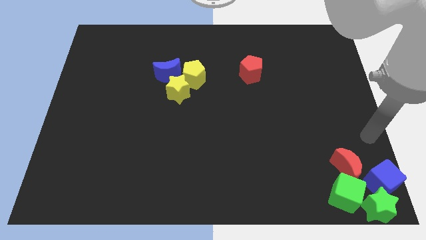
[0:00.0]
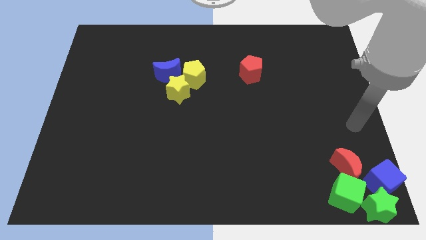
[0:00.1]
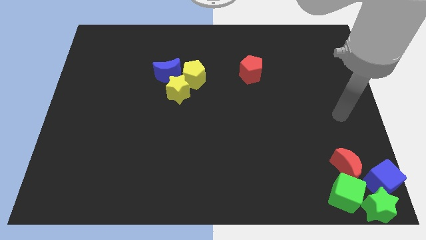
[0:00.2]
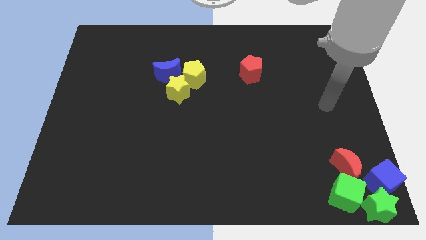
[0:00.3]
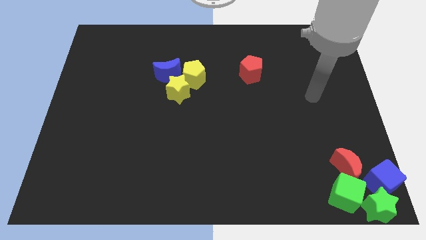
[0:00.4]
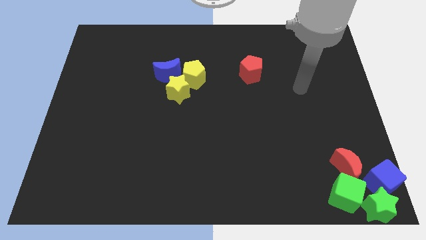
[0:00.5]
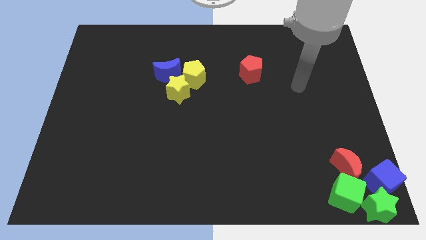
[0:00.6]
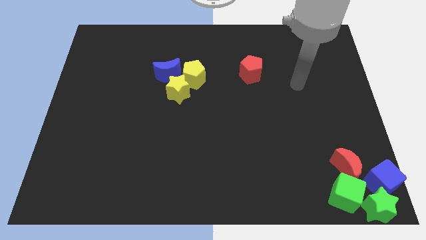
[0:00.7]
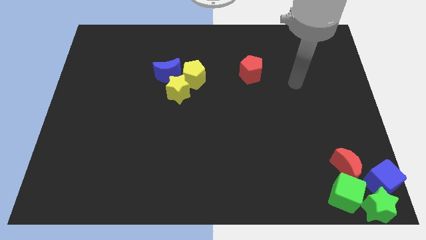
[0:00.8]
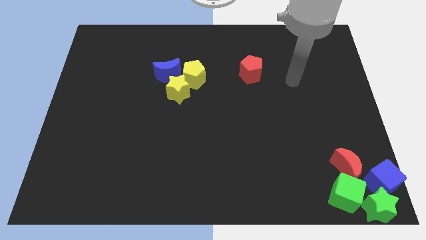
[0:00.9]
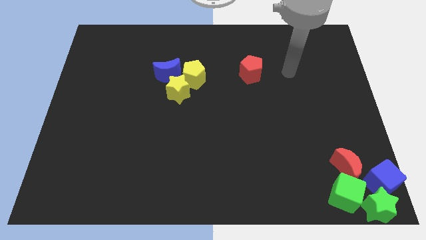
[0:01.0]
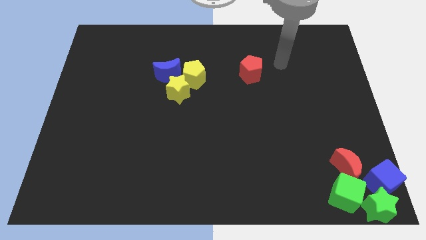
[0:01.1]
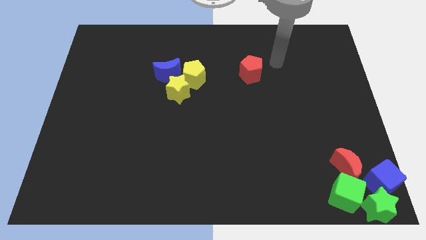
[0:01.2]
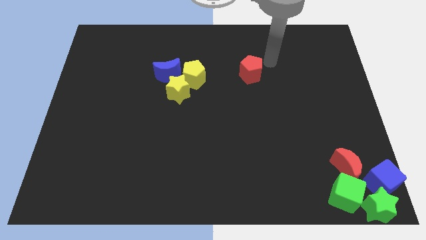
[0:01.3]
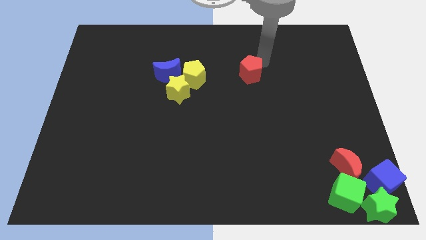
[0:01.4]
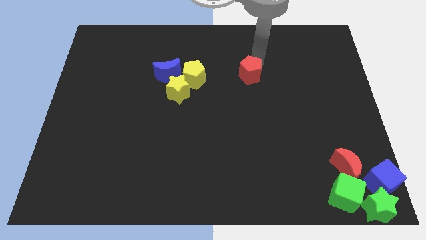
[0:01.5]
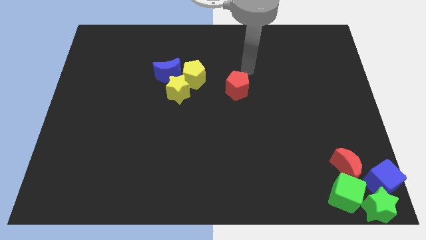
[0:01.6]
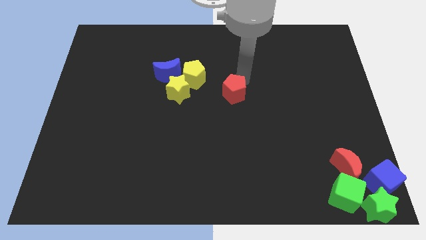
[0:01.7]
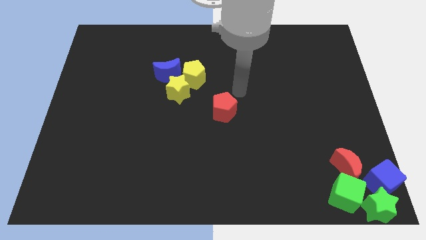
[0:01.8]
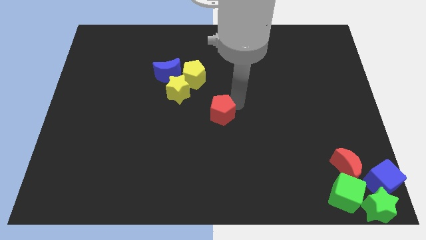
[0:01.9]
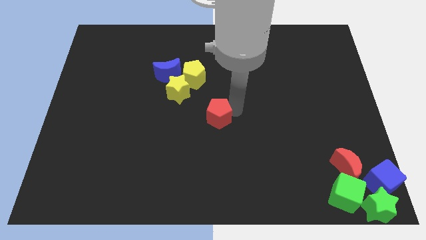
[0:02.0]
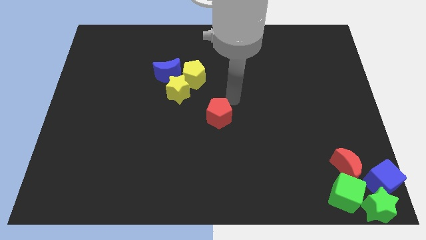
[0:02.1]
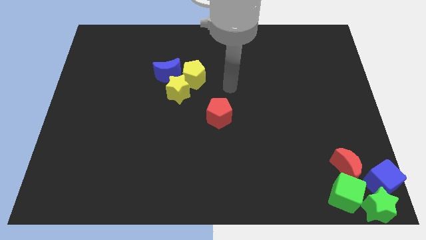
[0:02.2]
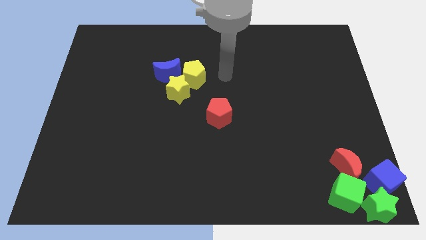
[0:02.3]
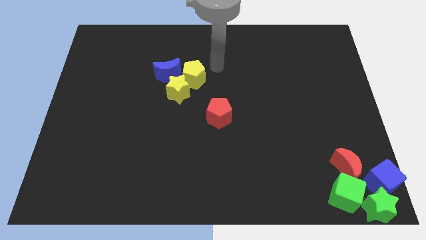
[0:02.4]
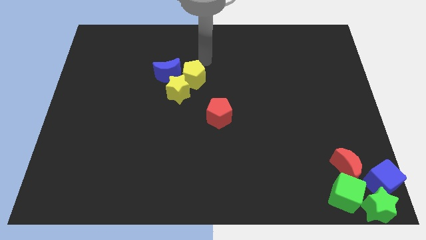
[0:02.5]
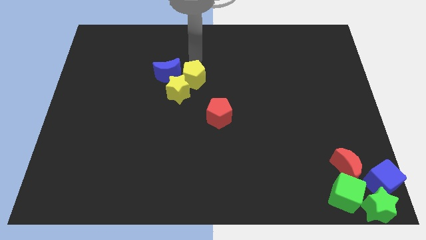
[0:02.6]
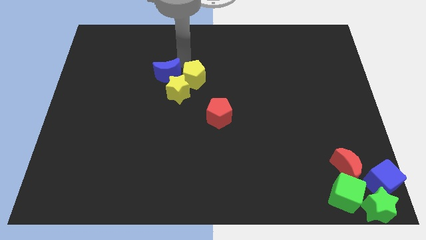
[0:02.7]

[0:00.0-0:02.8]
place the red pentagon at the center of the board

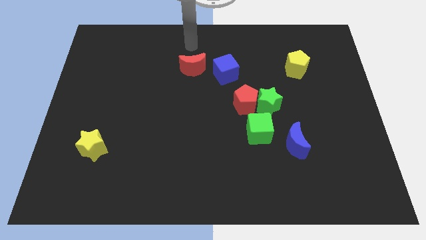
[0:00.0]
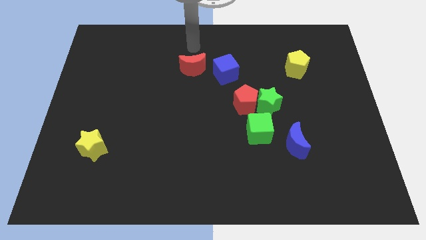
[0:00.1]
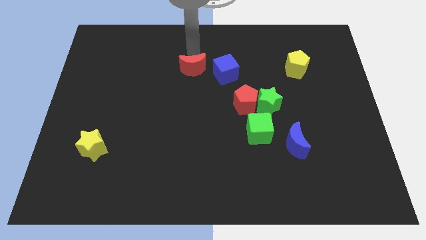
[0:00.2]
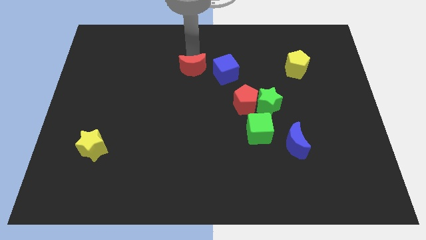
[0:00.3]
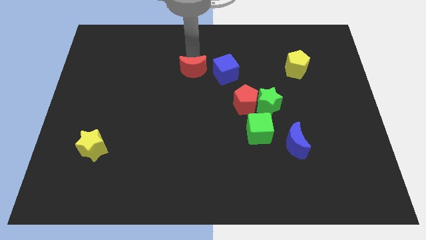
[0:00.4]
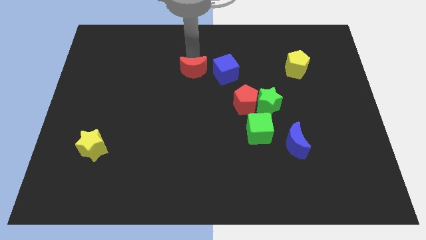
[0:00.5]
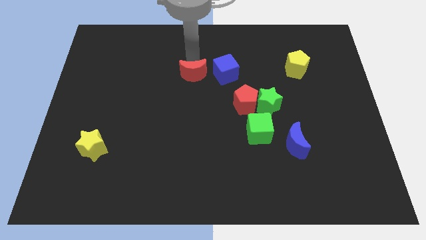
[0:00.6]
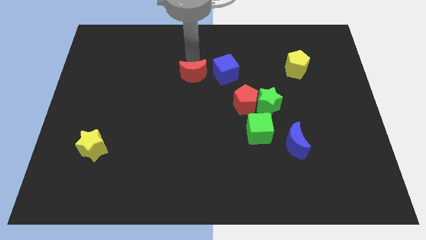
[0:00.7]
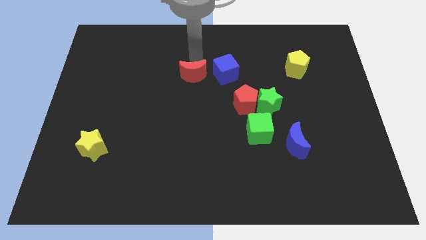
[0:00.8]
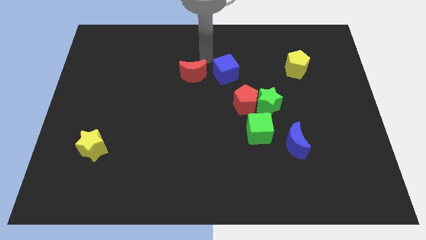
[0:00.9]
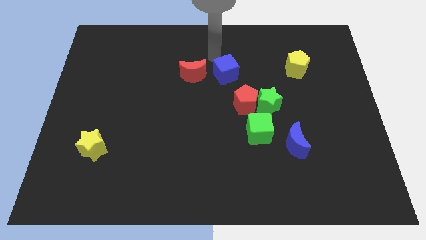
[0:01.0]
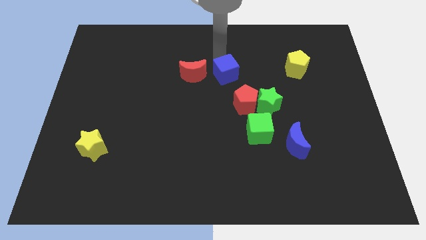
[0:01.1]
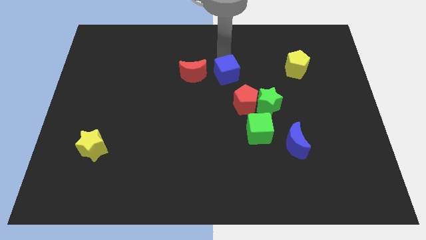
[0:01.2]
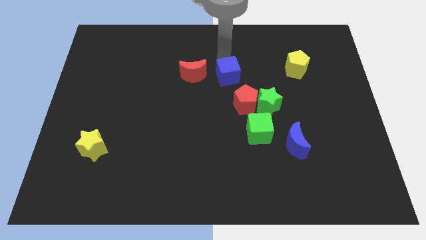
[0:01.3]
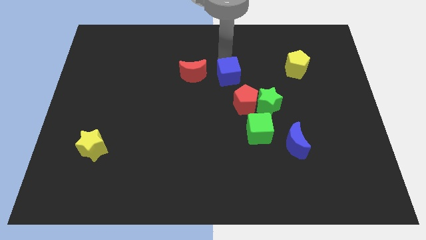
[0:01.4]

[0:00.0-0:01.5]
place the red moon left to blue cube

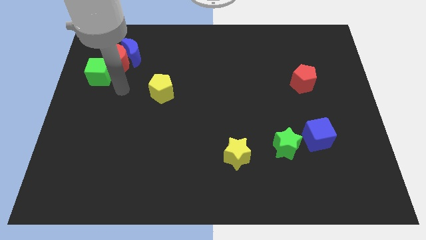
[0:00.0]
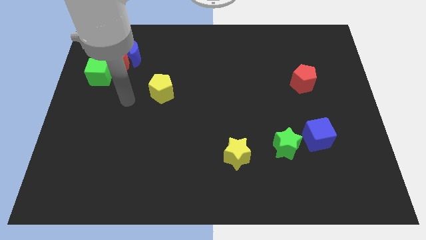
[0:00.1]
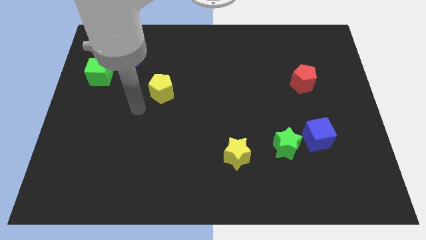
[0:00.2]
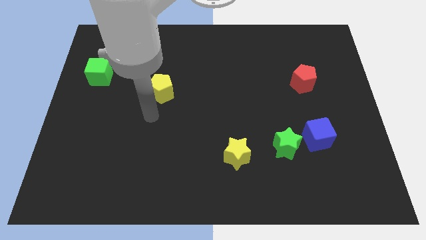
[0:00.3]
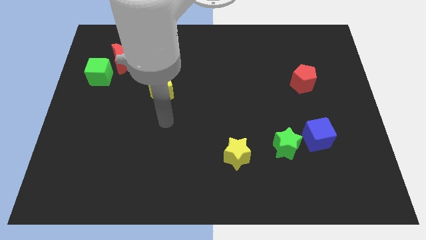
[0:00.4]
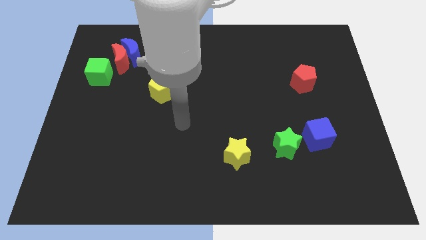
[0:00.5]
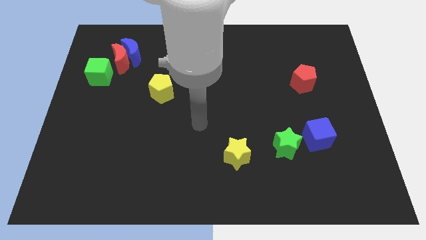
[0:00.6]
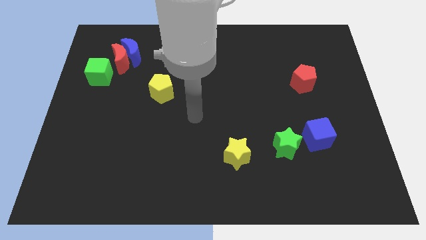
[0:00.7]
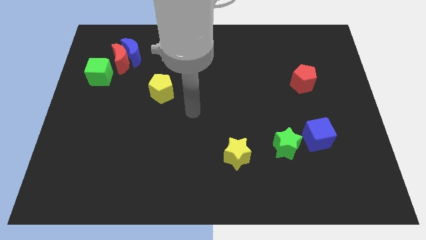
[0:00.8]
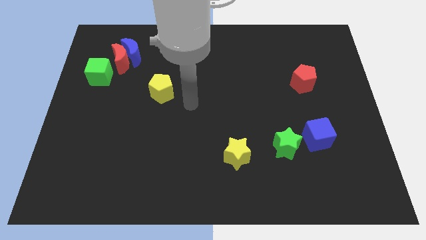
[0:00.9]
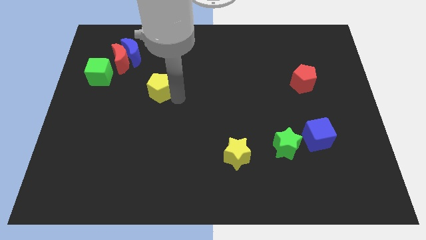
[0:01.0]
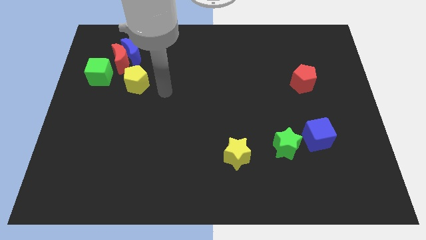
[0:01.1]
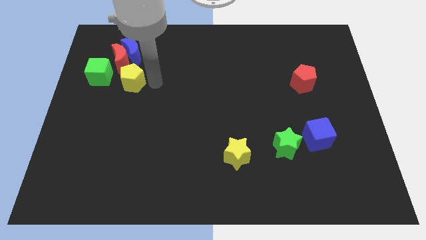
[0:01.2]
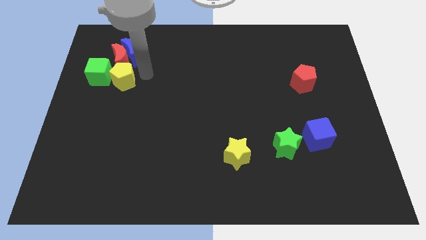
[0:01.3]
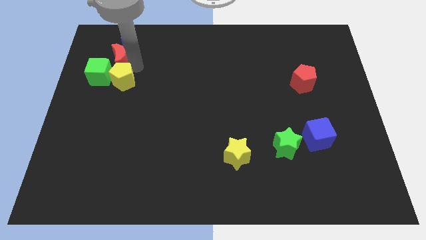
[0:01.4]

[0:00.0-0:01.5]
move the yellow pentagon to the bottom side of the red moon

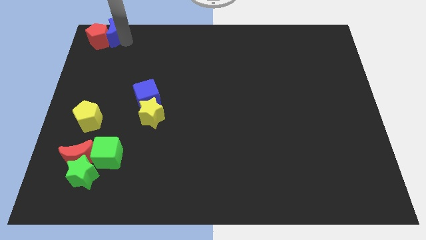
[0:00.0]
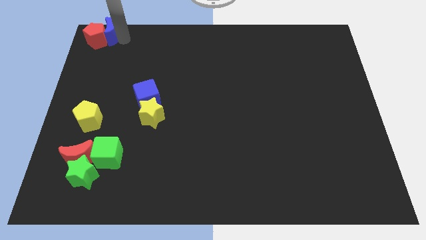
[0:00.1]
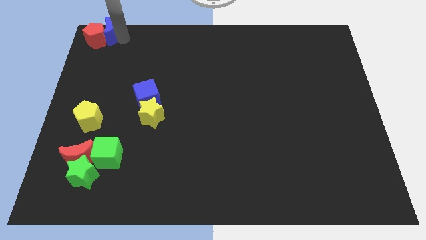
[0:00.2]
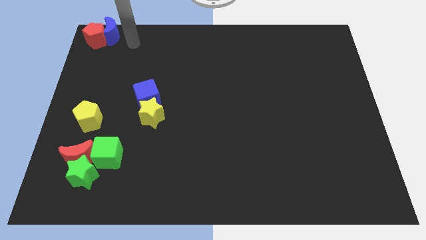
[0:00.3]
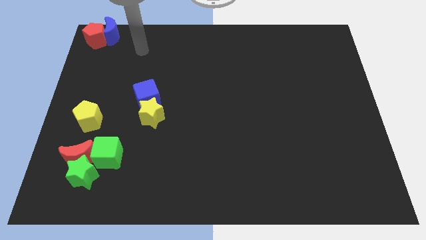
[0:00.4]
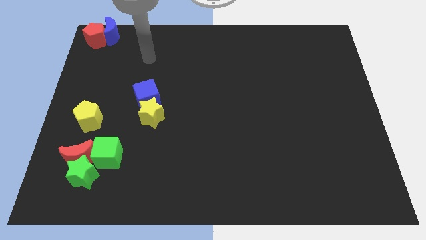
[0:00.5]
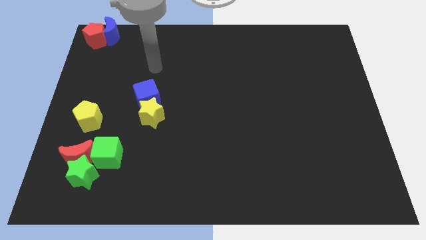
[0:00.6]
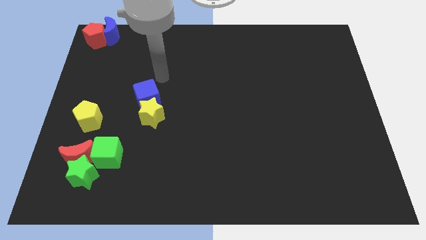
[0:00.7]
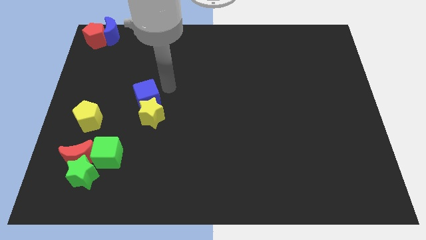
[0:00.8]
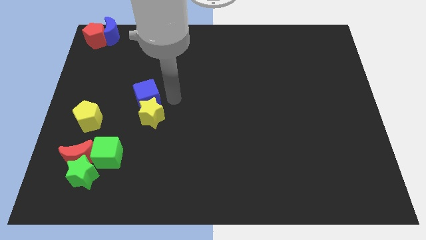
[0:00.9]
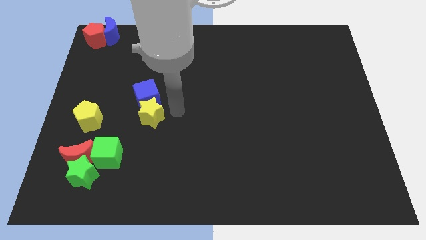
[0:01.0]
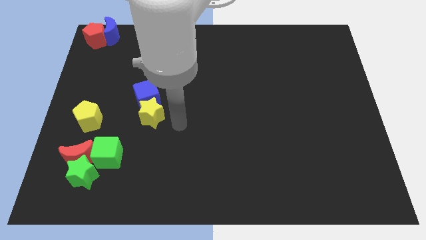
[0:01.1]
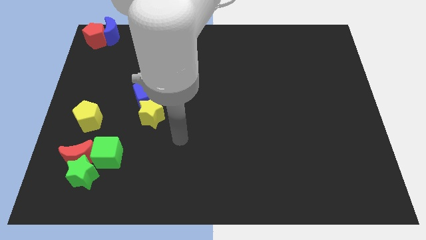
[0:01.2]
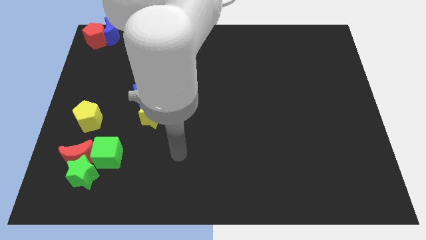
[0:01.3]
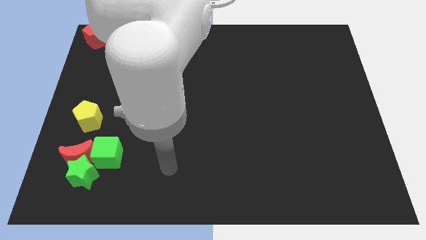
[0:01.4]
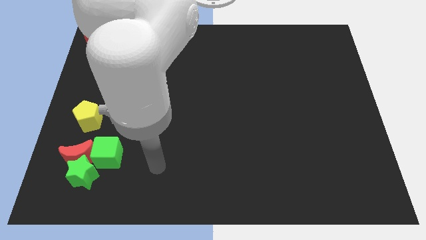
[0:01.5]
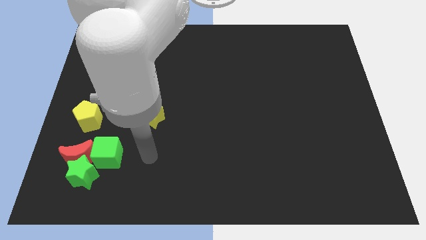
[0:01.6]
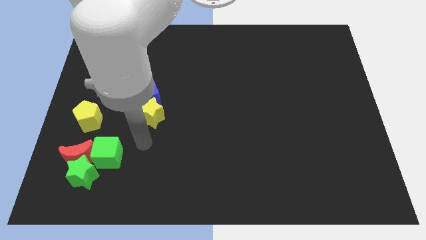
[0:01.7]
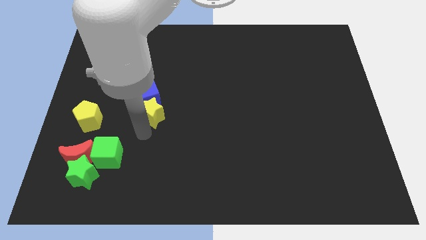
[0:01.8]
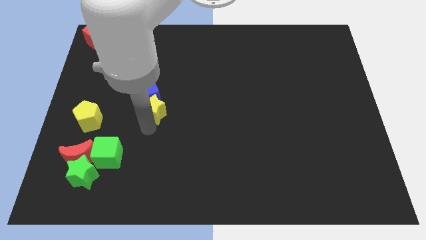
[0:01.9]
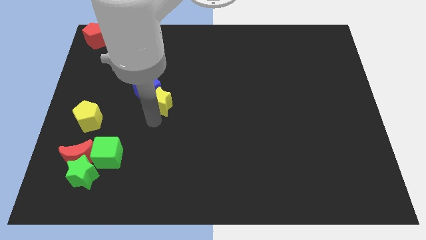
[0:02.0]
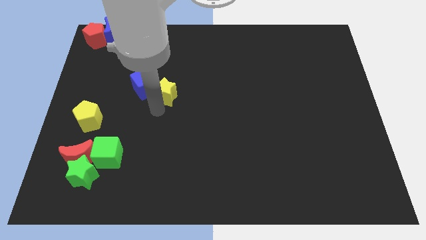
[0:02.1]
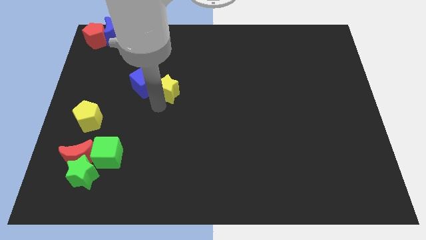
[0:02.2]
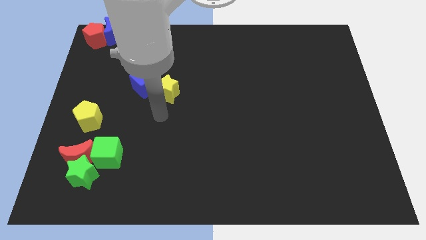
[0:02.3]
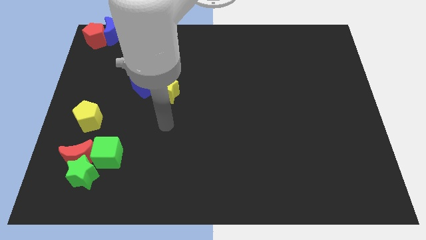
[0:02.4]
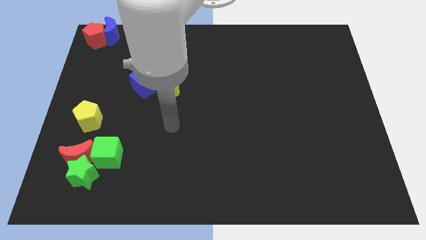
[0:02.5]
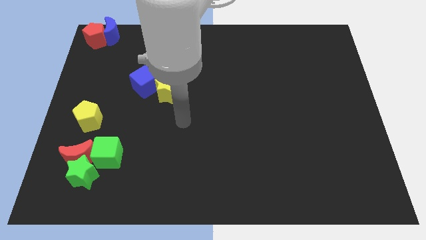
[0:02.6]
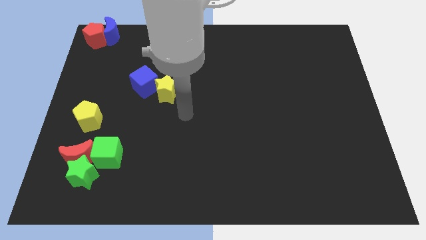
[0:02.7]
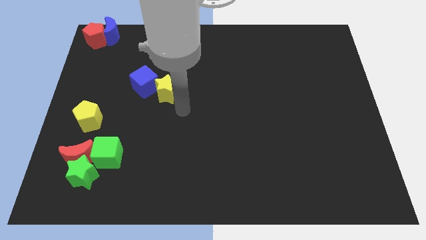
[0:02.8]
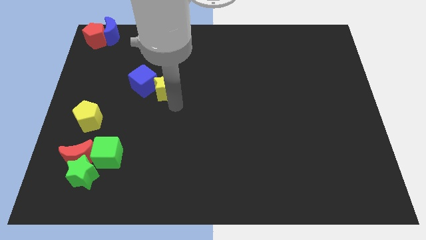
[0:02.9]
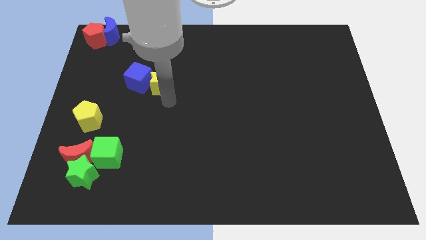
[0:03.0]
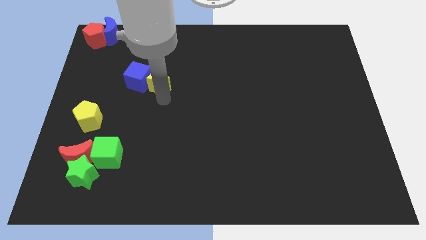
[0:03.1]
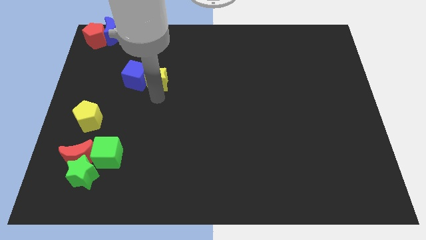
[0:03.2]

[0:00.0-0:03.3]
push the yellow star and the blue cube towards the top left of the board
